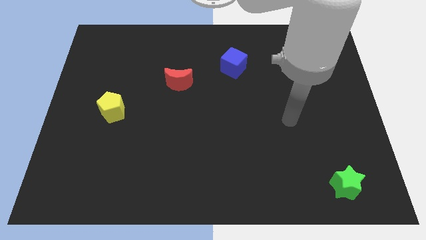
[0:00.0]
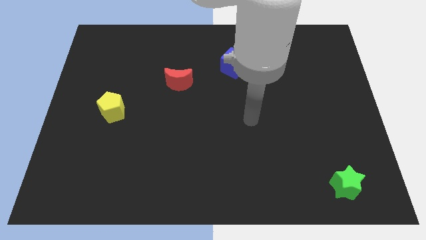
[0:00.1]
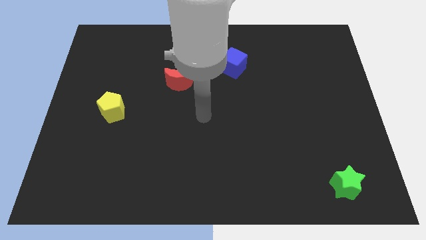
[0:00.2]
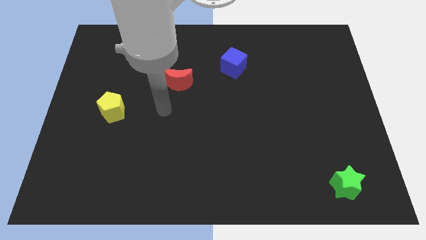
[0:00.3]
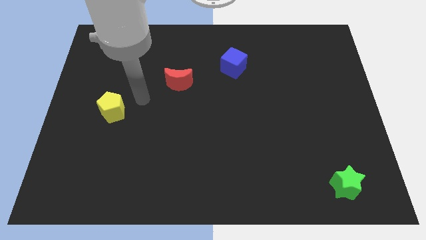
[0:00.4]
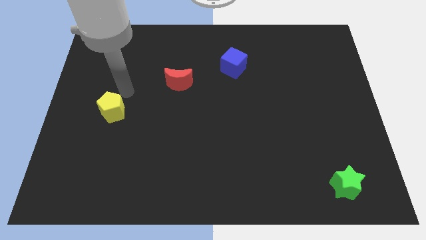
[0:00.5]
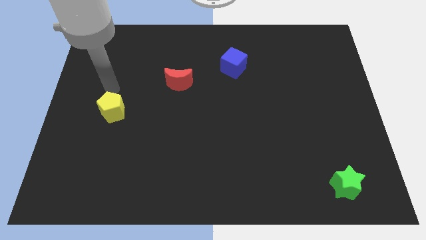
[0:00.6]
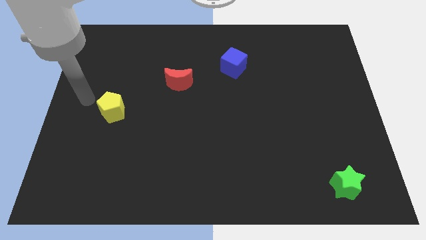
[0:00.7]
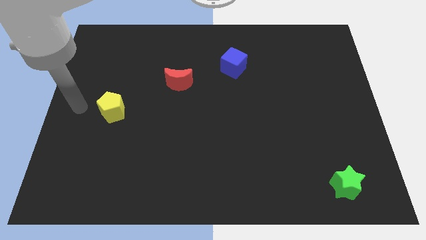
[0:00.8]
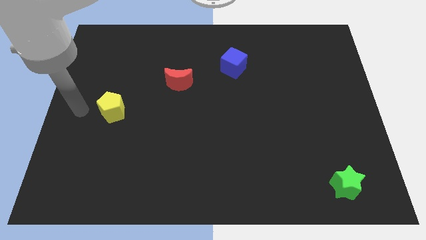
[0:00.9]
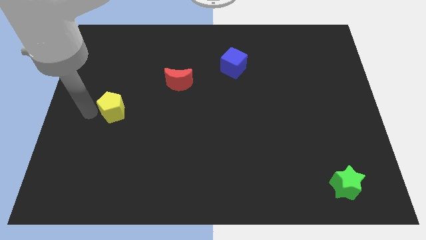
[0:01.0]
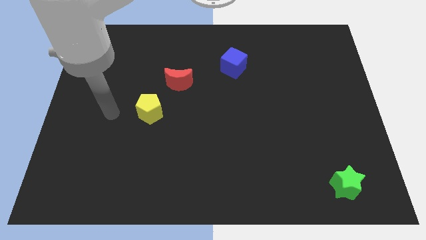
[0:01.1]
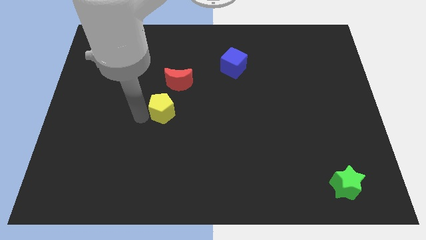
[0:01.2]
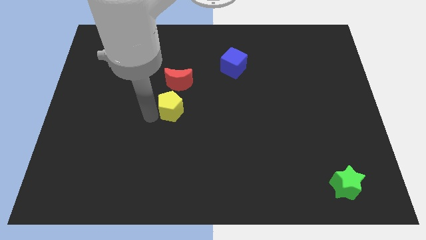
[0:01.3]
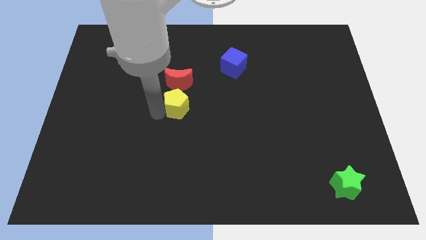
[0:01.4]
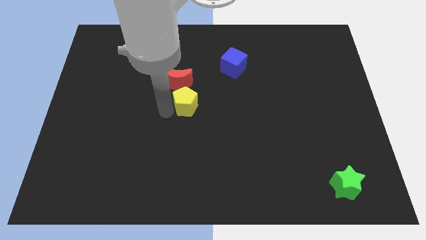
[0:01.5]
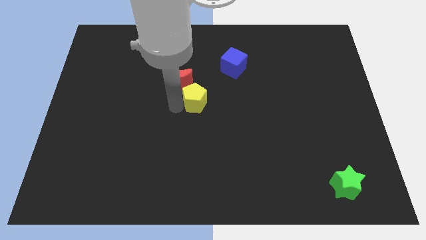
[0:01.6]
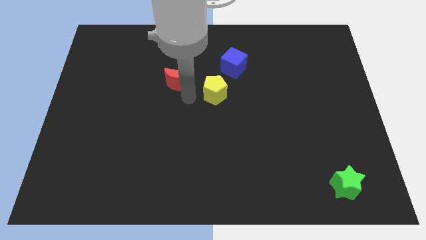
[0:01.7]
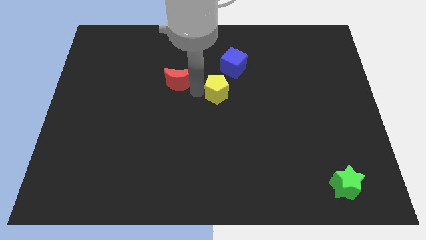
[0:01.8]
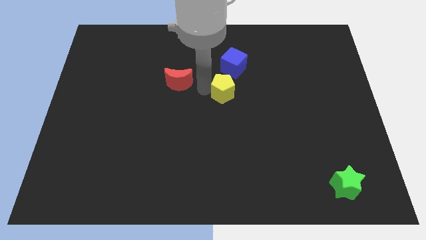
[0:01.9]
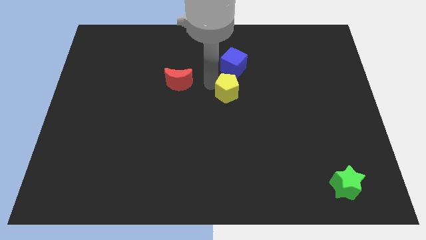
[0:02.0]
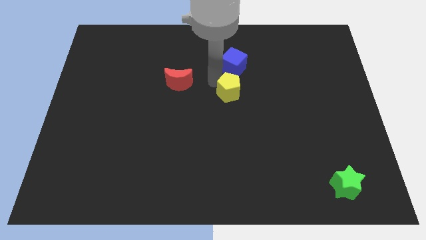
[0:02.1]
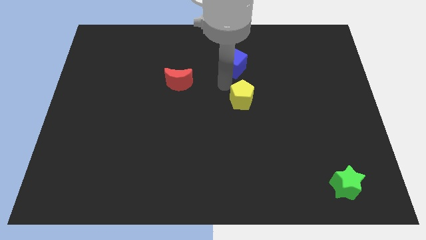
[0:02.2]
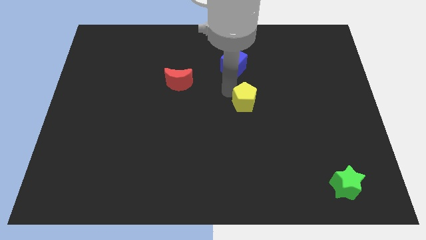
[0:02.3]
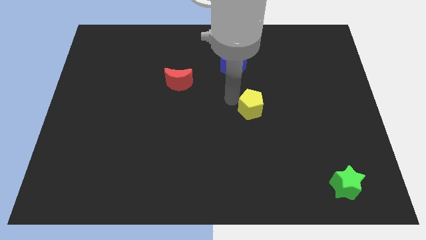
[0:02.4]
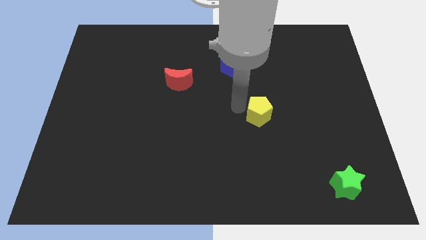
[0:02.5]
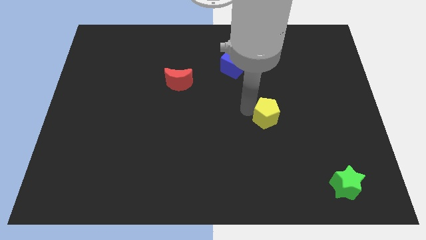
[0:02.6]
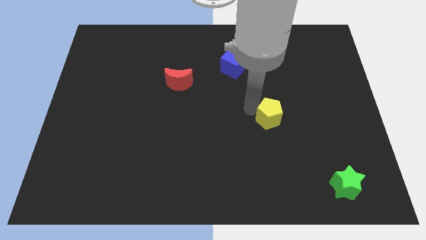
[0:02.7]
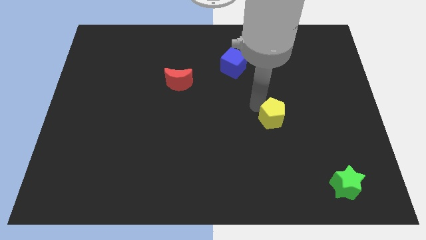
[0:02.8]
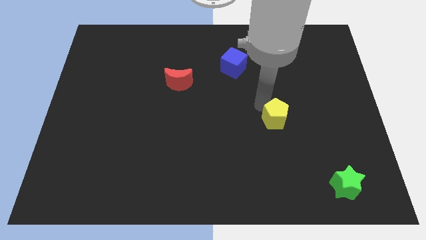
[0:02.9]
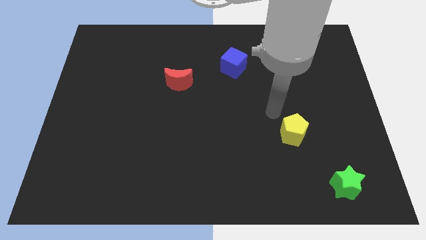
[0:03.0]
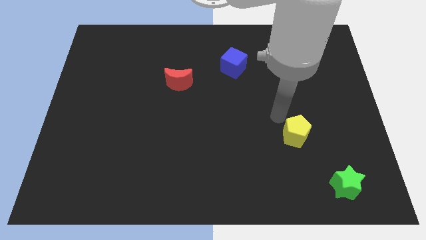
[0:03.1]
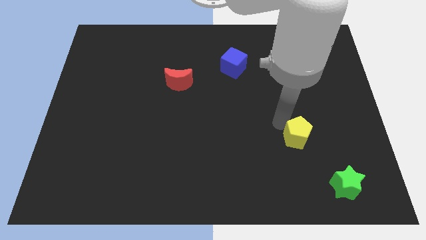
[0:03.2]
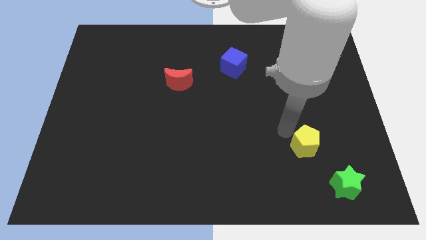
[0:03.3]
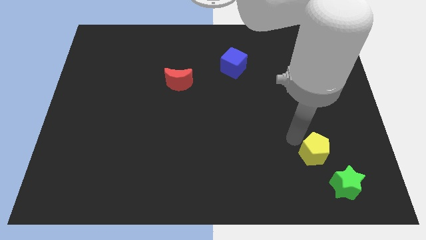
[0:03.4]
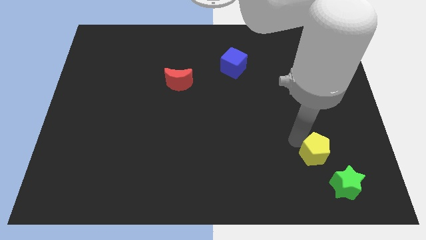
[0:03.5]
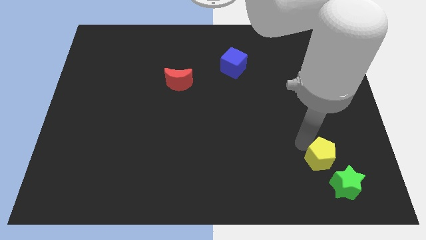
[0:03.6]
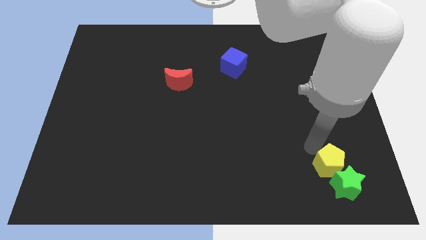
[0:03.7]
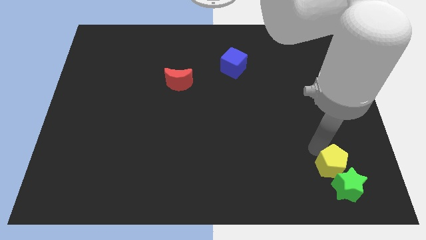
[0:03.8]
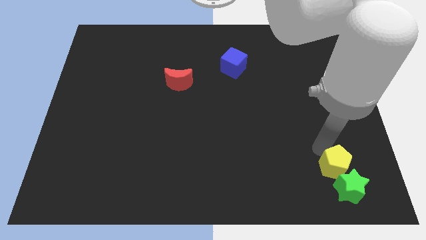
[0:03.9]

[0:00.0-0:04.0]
push the yellow pentagon close to the star

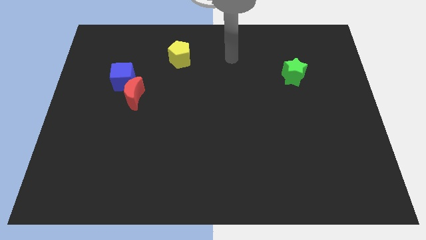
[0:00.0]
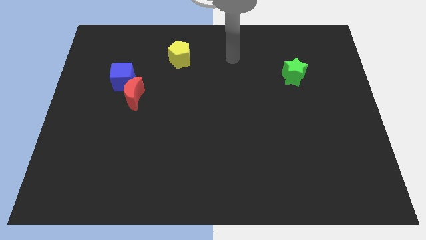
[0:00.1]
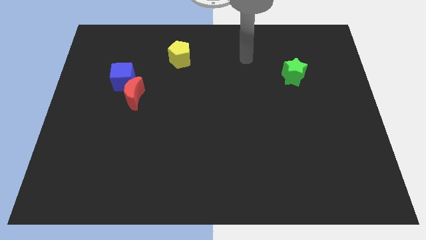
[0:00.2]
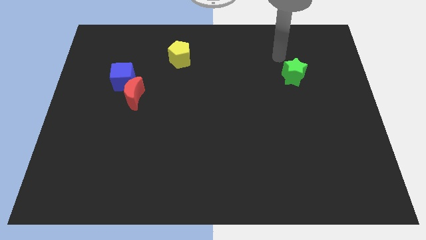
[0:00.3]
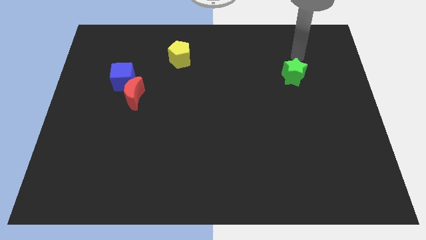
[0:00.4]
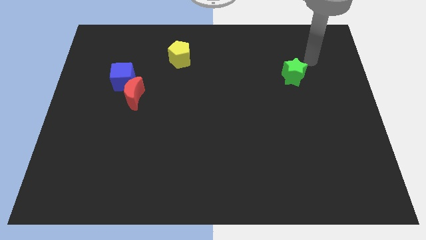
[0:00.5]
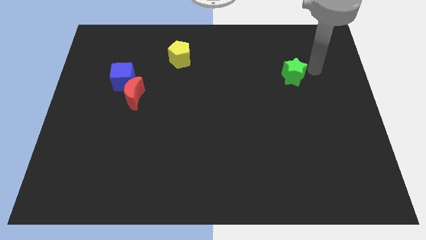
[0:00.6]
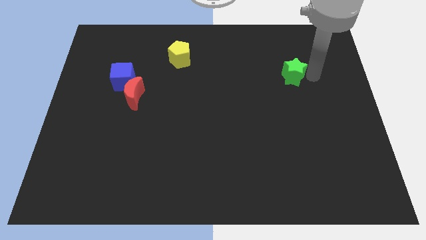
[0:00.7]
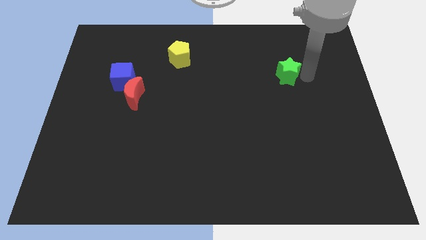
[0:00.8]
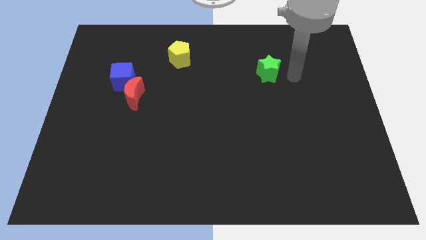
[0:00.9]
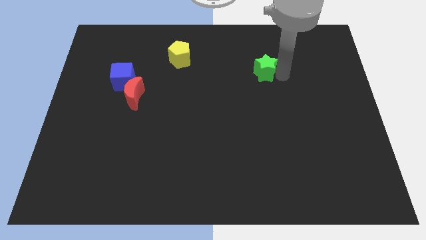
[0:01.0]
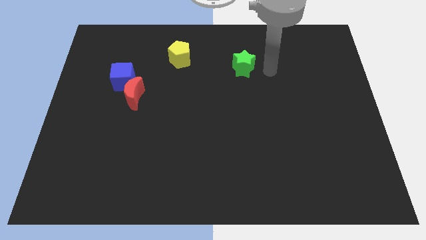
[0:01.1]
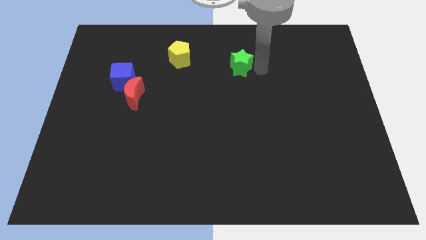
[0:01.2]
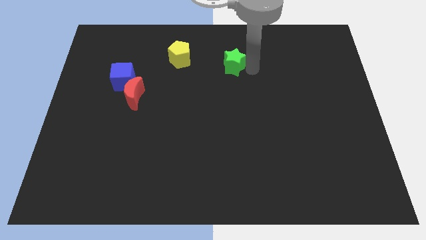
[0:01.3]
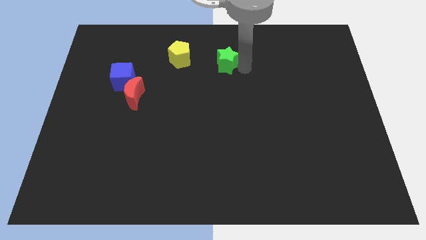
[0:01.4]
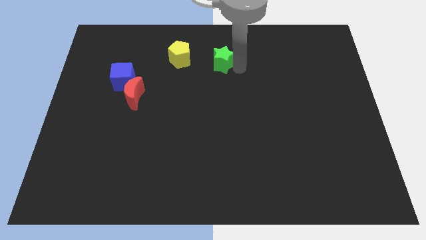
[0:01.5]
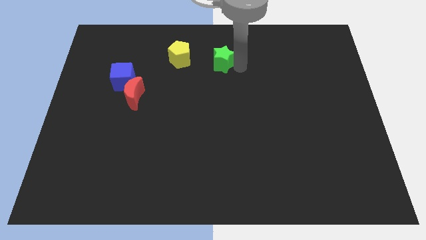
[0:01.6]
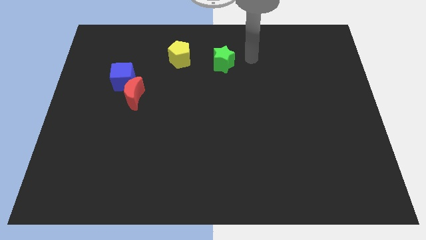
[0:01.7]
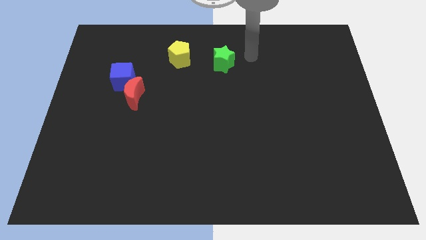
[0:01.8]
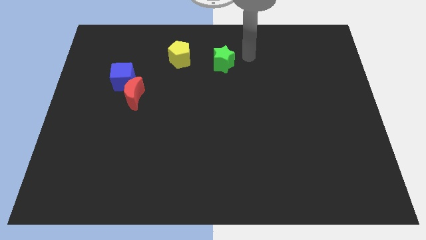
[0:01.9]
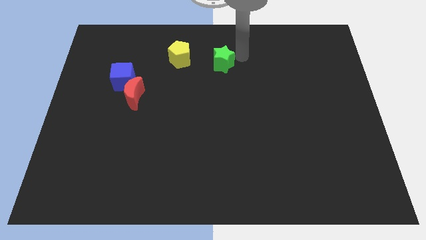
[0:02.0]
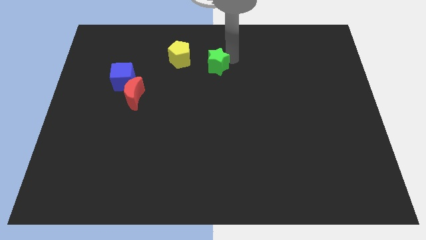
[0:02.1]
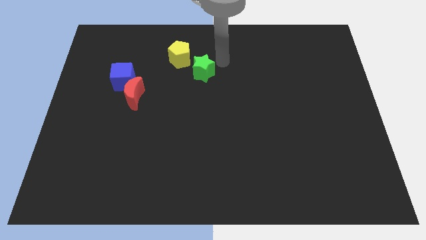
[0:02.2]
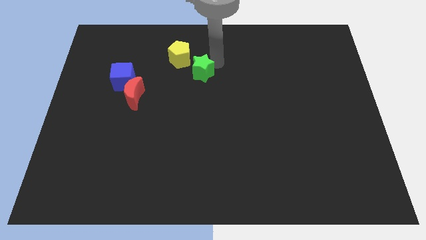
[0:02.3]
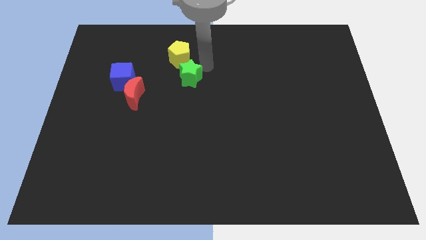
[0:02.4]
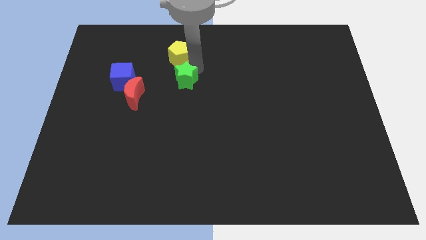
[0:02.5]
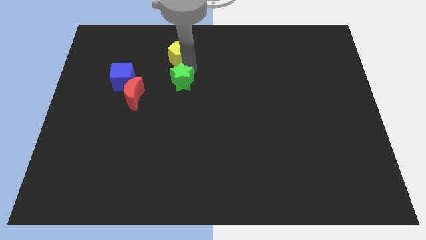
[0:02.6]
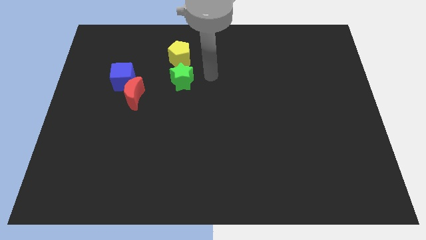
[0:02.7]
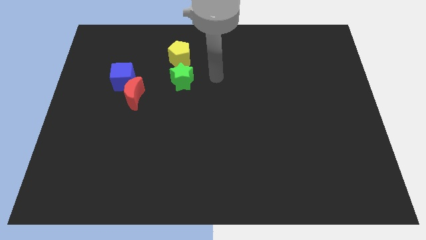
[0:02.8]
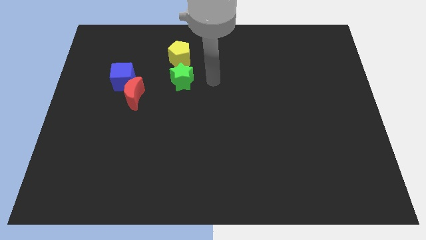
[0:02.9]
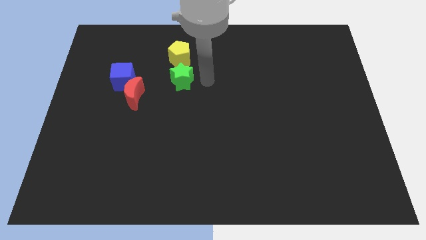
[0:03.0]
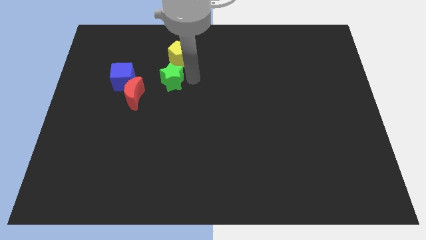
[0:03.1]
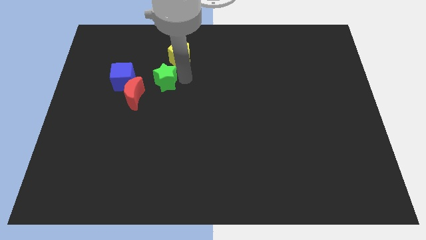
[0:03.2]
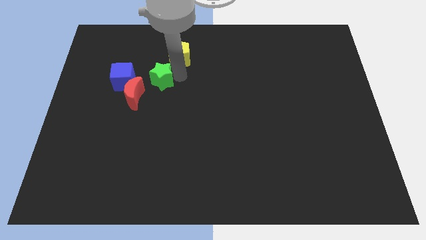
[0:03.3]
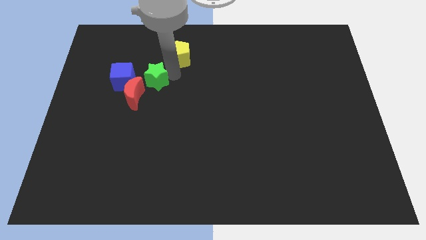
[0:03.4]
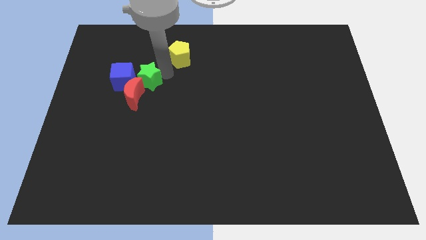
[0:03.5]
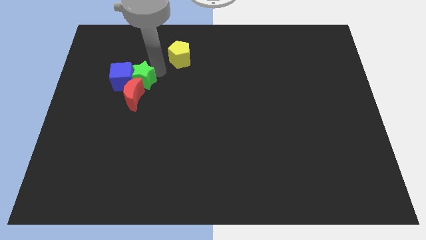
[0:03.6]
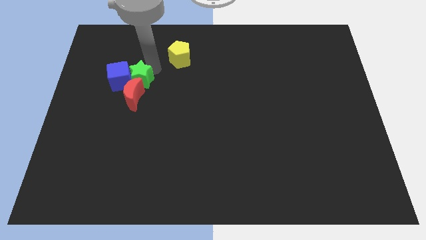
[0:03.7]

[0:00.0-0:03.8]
move the star towards the blue block

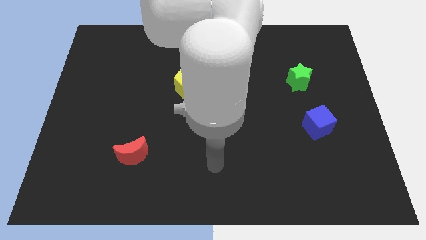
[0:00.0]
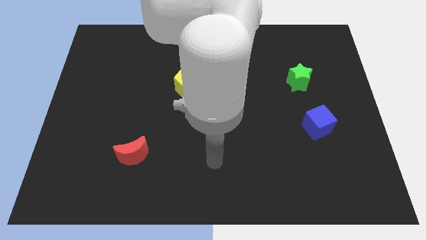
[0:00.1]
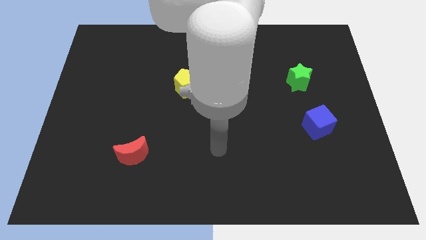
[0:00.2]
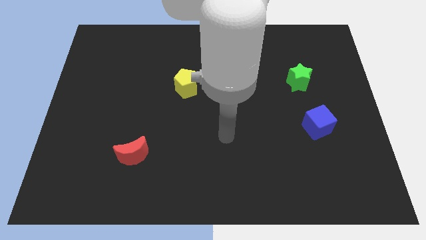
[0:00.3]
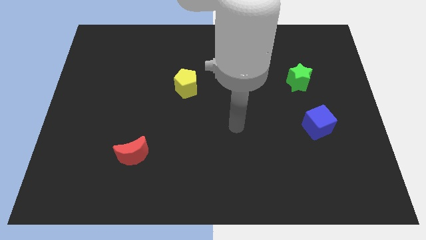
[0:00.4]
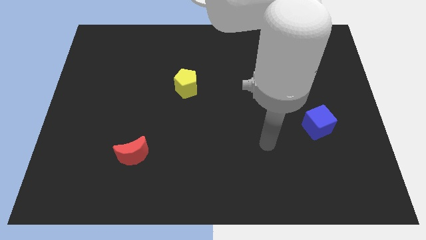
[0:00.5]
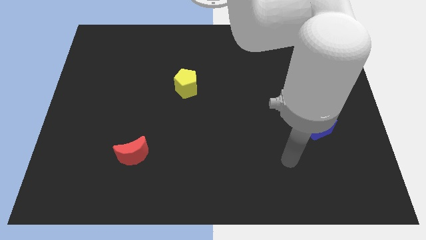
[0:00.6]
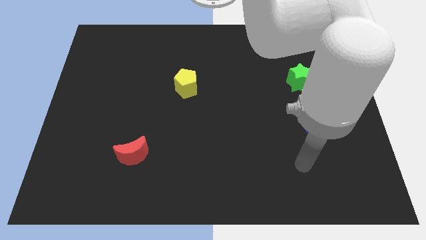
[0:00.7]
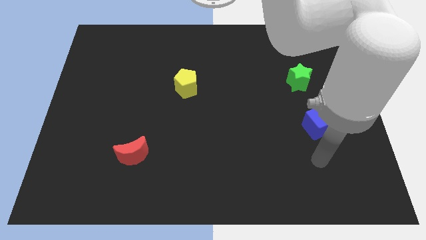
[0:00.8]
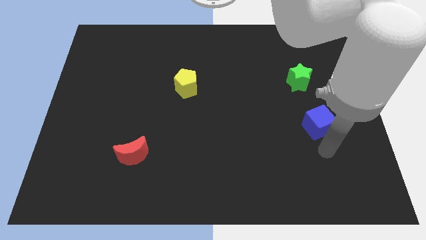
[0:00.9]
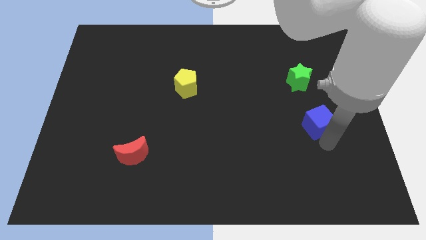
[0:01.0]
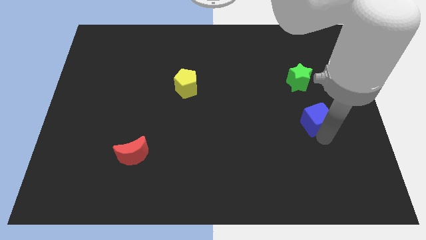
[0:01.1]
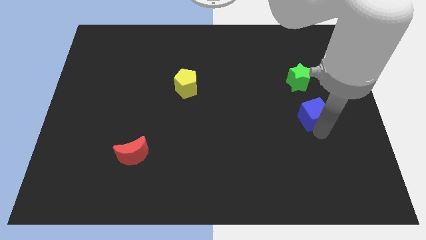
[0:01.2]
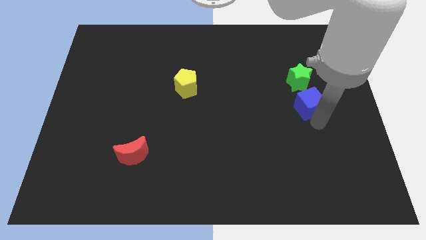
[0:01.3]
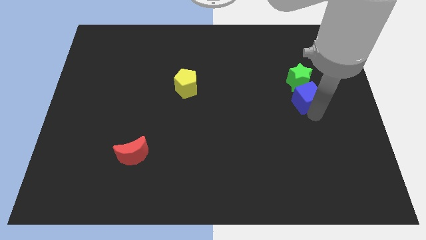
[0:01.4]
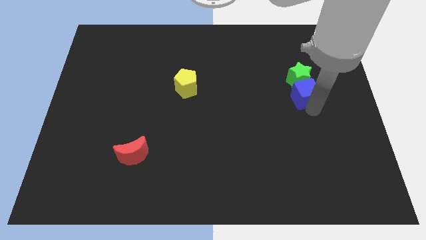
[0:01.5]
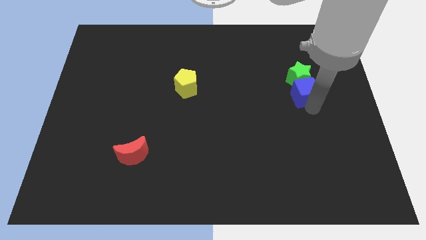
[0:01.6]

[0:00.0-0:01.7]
put the blue cube to the green block
